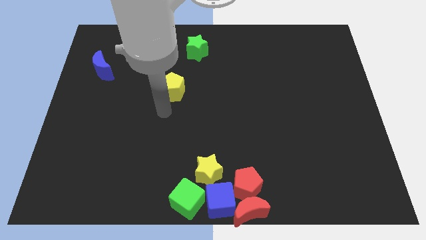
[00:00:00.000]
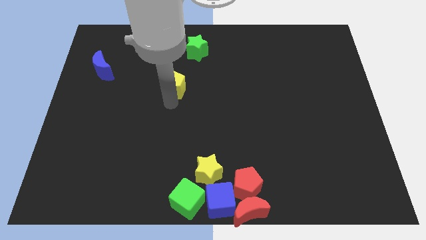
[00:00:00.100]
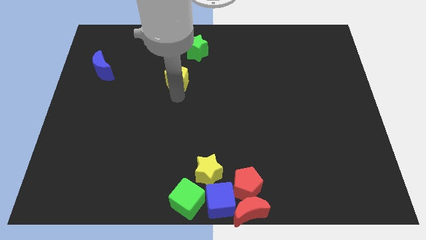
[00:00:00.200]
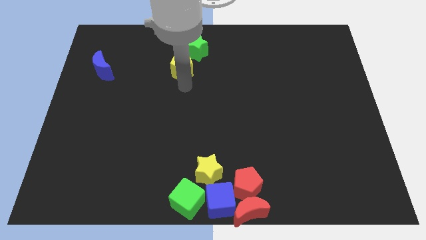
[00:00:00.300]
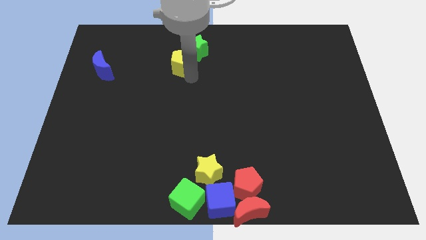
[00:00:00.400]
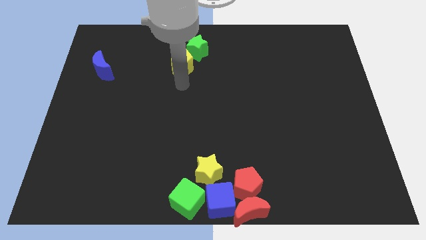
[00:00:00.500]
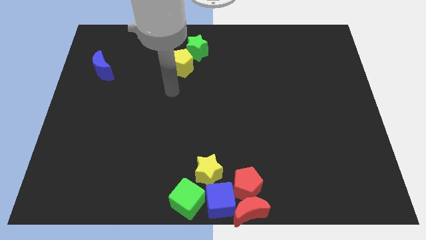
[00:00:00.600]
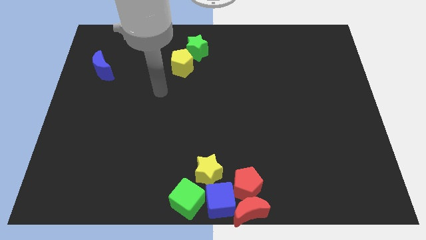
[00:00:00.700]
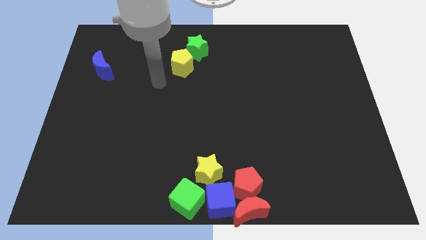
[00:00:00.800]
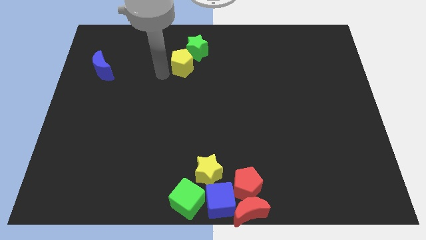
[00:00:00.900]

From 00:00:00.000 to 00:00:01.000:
place yellow pentagon below green star

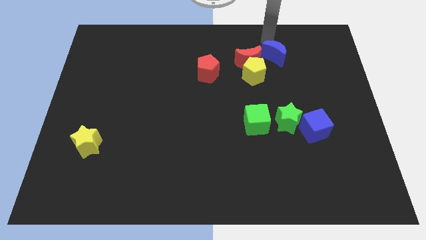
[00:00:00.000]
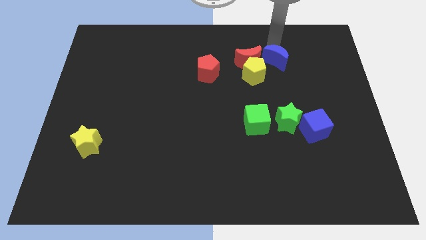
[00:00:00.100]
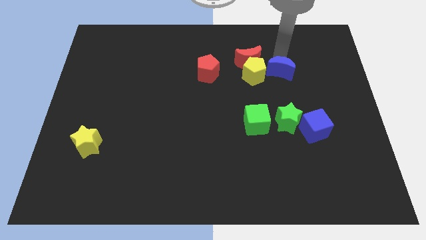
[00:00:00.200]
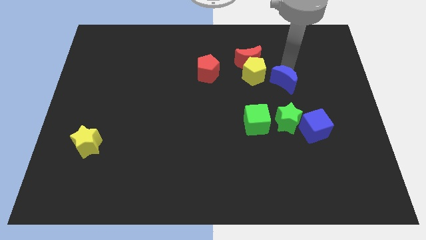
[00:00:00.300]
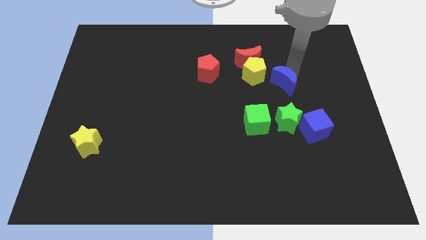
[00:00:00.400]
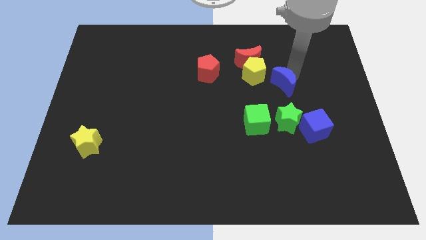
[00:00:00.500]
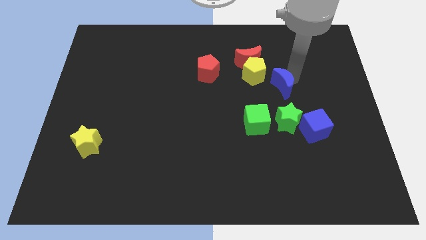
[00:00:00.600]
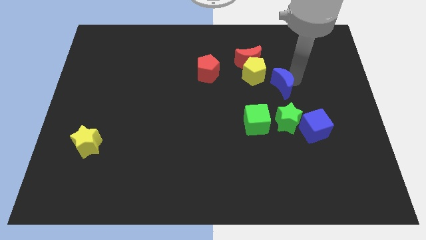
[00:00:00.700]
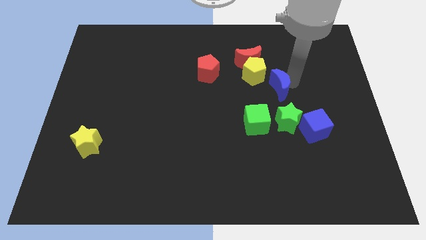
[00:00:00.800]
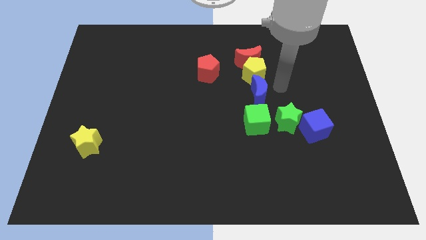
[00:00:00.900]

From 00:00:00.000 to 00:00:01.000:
move the blue crescent to the top of the green cube

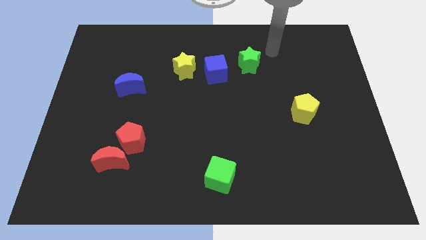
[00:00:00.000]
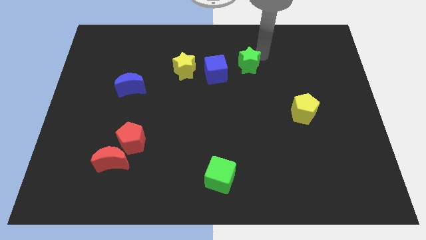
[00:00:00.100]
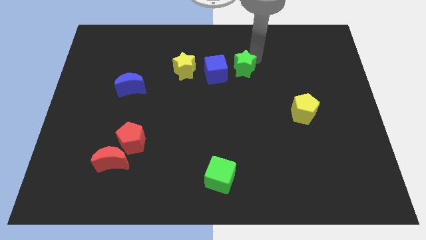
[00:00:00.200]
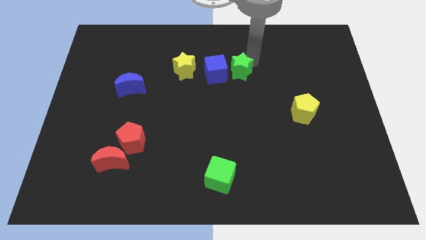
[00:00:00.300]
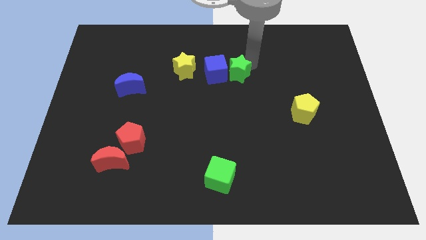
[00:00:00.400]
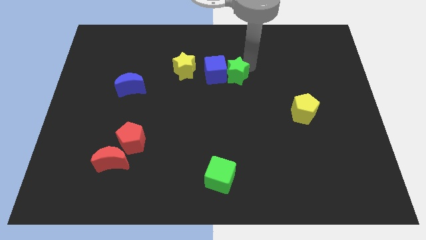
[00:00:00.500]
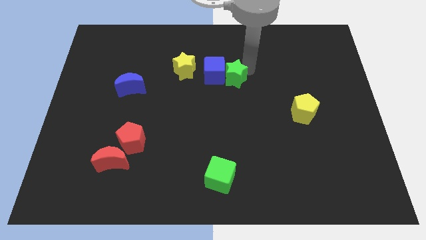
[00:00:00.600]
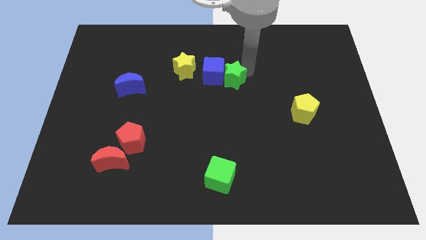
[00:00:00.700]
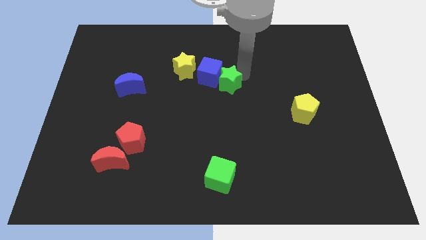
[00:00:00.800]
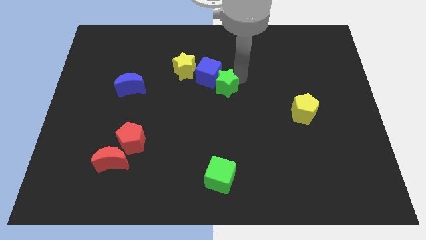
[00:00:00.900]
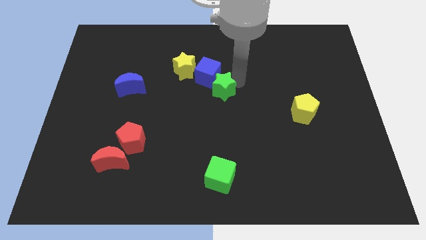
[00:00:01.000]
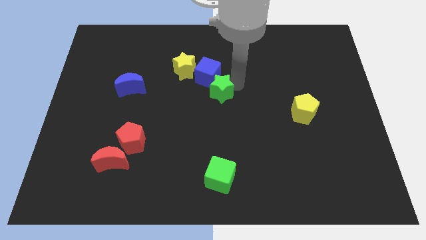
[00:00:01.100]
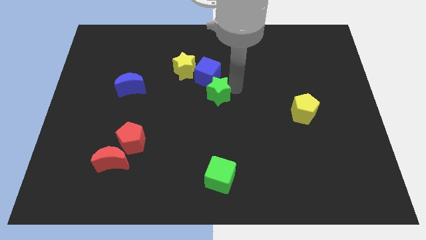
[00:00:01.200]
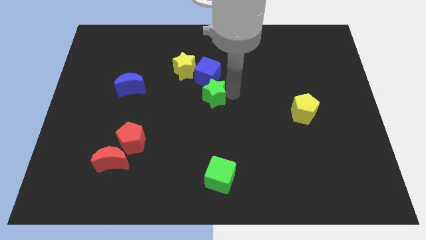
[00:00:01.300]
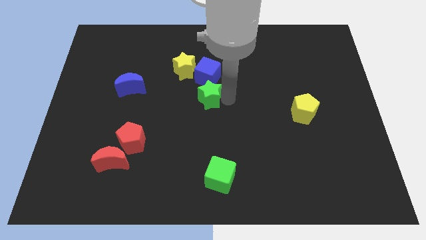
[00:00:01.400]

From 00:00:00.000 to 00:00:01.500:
place green star below blue cube

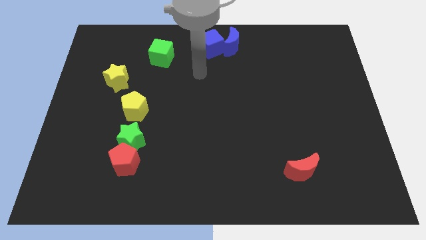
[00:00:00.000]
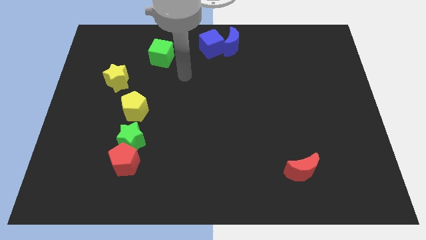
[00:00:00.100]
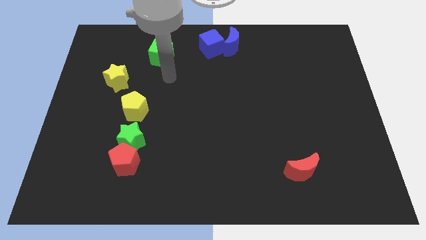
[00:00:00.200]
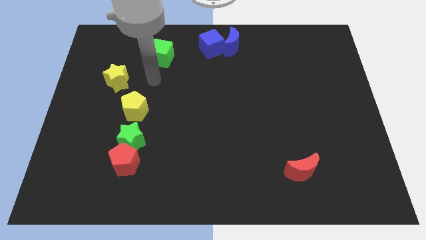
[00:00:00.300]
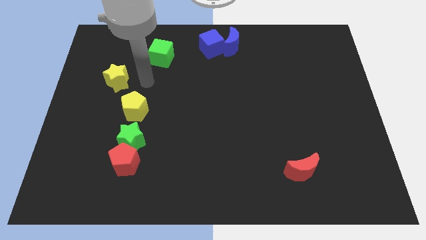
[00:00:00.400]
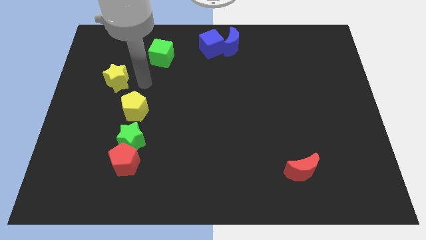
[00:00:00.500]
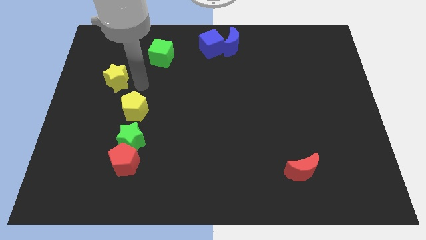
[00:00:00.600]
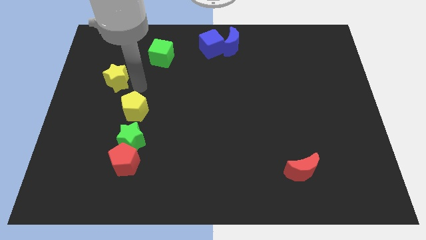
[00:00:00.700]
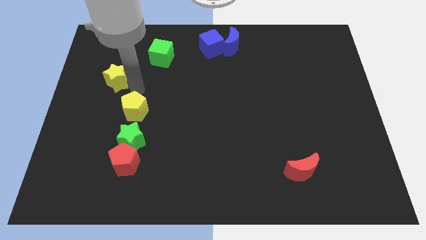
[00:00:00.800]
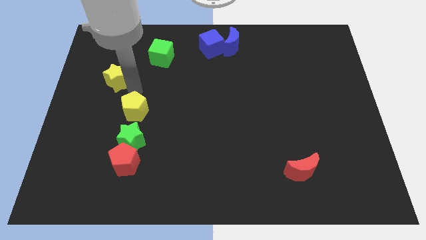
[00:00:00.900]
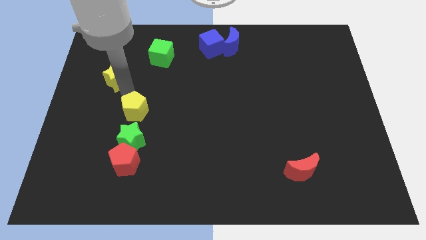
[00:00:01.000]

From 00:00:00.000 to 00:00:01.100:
move arm near yellow star

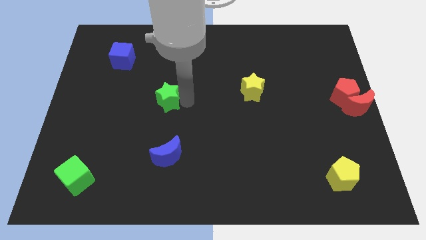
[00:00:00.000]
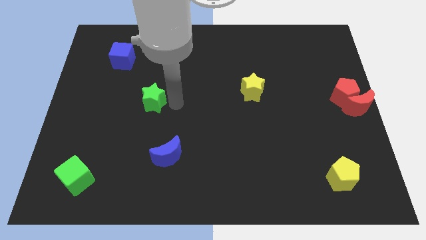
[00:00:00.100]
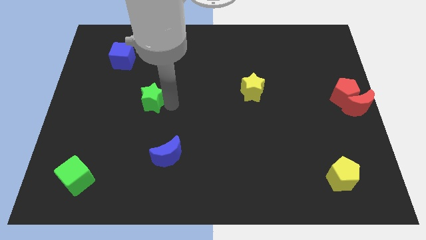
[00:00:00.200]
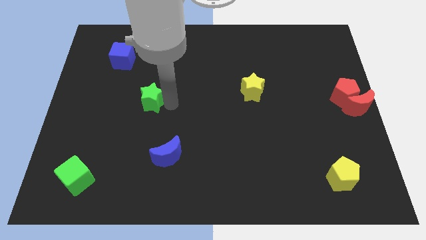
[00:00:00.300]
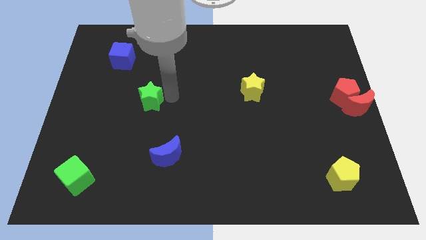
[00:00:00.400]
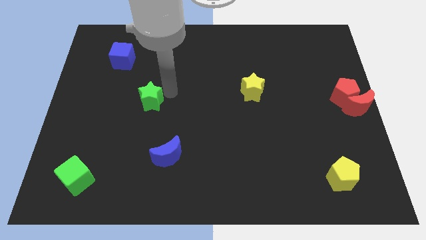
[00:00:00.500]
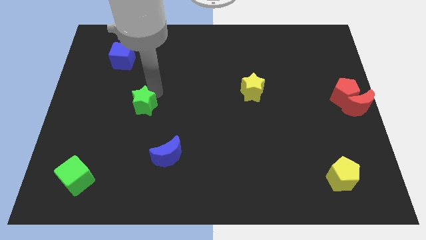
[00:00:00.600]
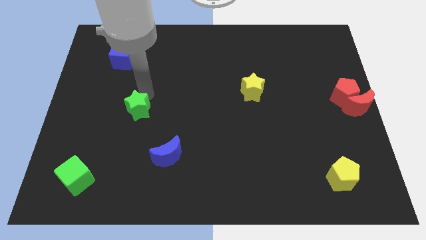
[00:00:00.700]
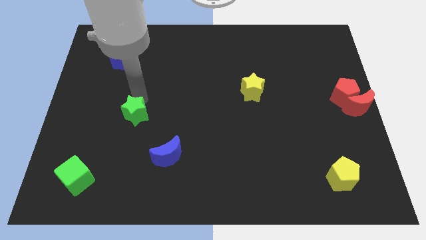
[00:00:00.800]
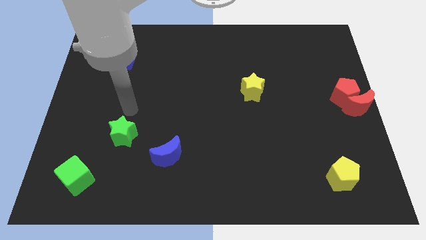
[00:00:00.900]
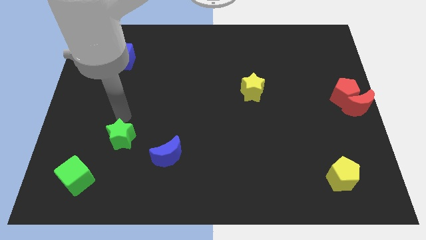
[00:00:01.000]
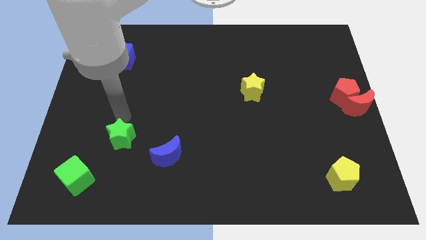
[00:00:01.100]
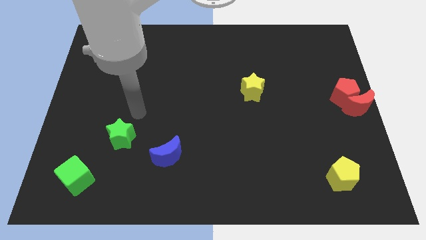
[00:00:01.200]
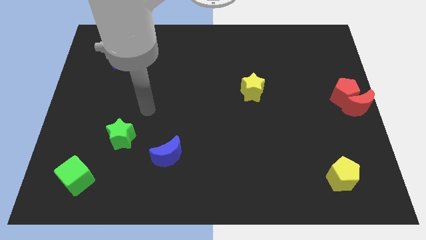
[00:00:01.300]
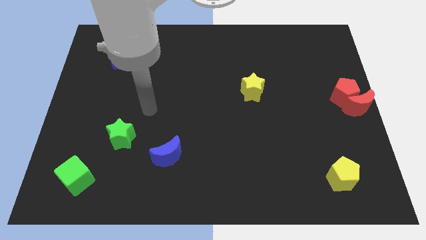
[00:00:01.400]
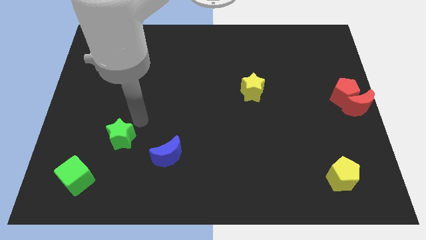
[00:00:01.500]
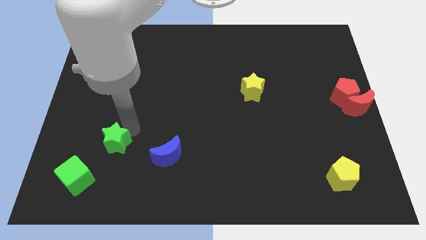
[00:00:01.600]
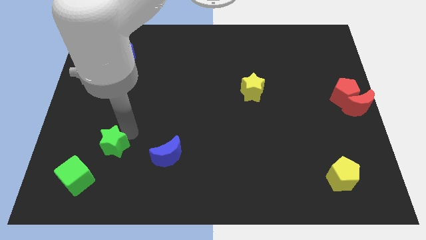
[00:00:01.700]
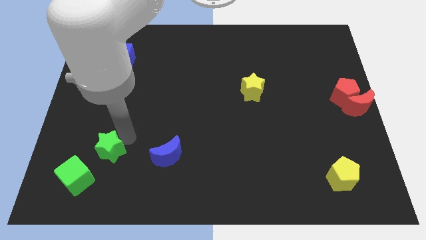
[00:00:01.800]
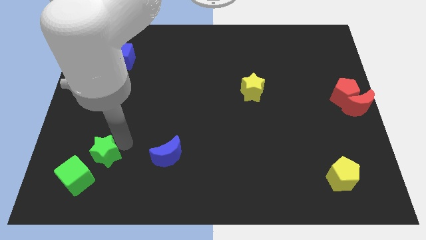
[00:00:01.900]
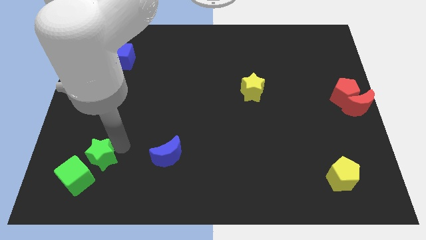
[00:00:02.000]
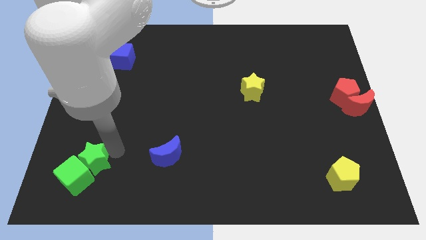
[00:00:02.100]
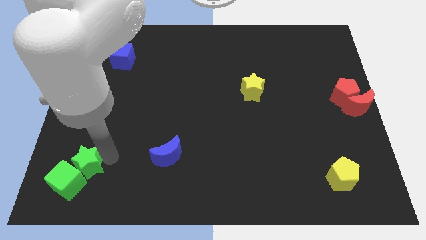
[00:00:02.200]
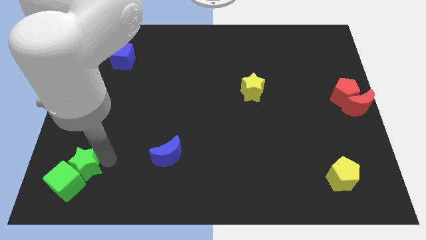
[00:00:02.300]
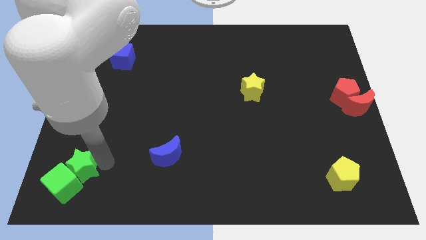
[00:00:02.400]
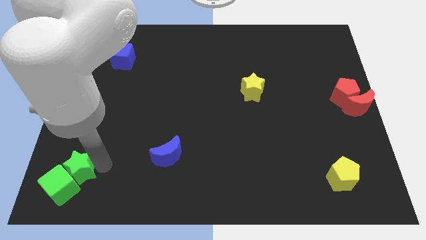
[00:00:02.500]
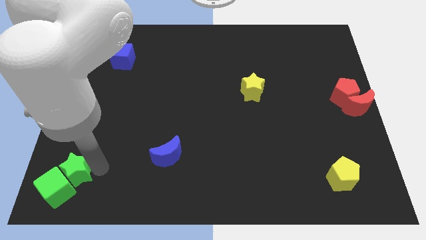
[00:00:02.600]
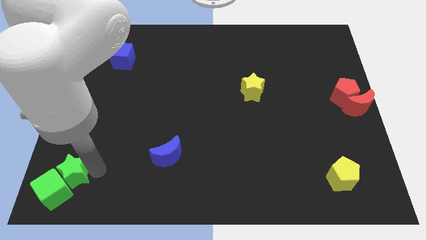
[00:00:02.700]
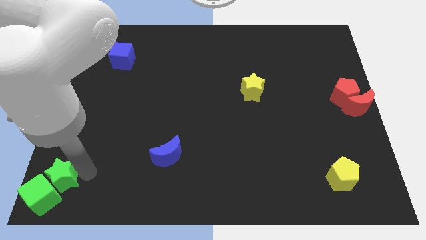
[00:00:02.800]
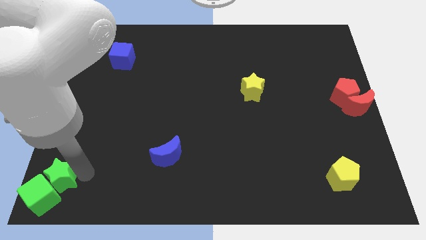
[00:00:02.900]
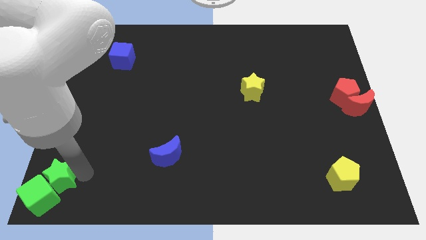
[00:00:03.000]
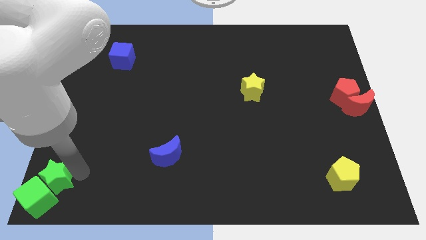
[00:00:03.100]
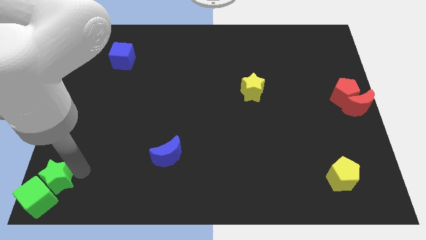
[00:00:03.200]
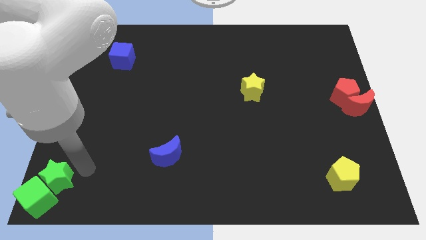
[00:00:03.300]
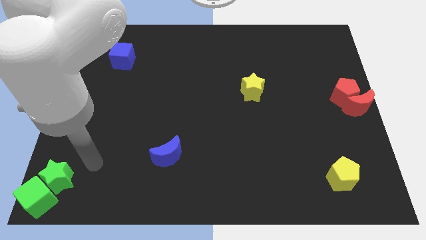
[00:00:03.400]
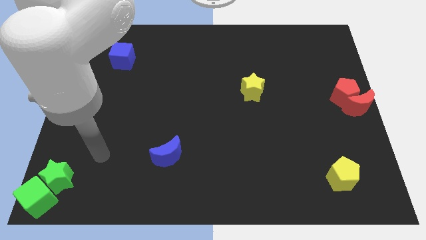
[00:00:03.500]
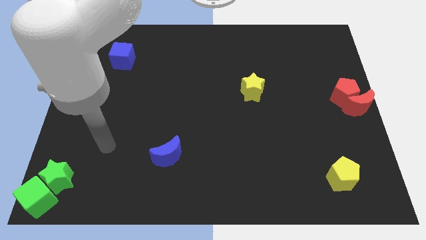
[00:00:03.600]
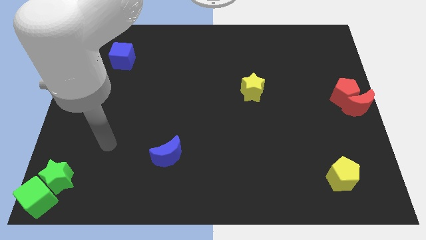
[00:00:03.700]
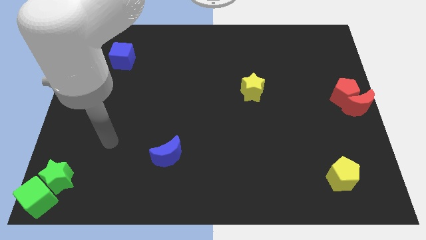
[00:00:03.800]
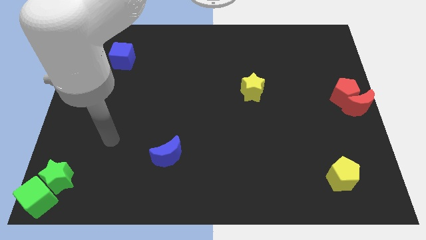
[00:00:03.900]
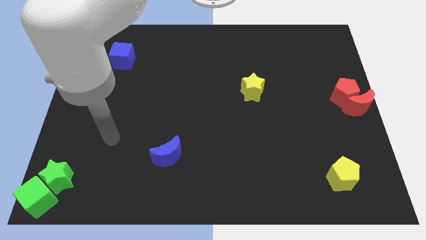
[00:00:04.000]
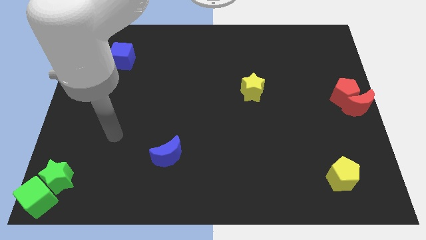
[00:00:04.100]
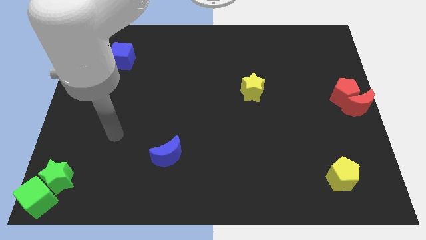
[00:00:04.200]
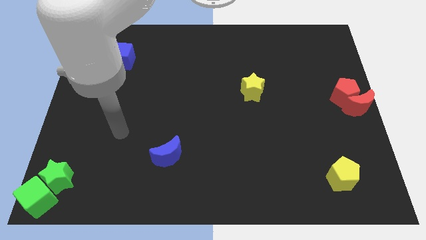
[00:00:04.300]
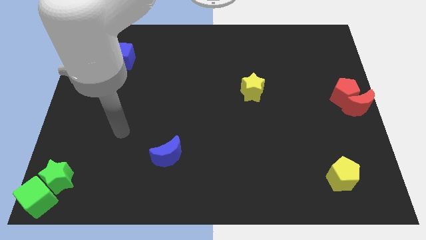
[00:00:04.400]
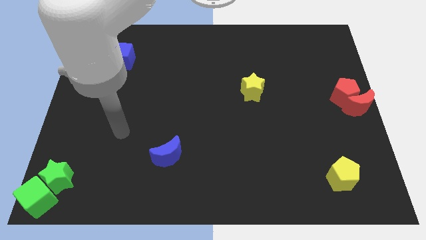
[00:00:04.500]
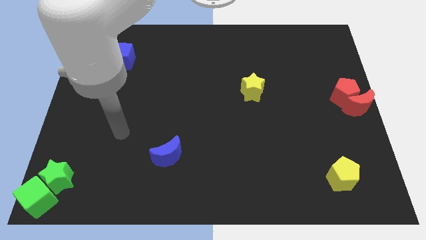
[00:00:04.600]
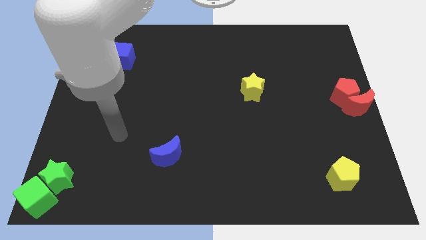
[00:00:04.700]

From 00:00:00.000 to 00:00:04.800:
push the green star into the green cube
